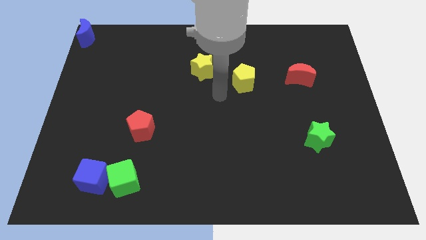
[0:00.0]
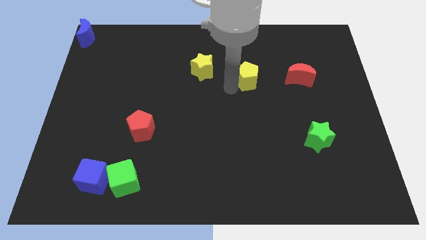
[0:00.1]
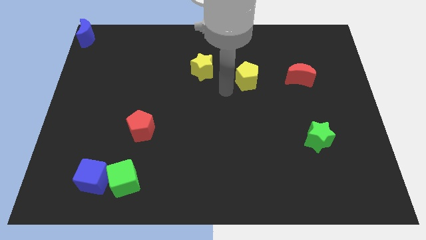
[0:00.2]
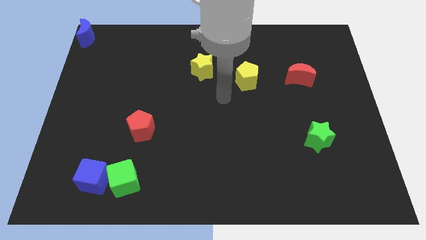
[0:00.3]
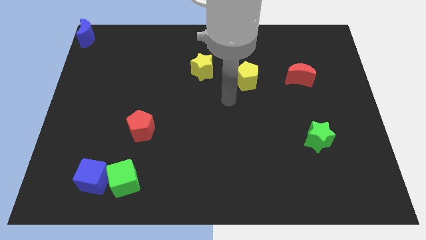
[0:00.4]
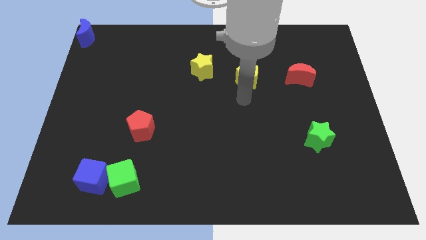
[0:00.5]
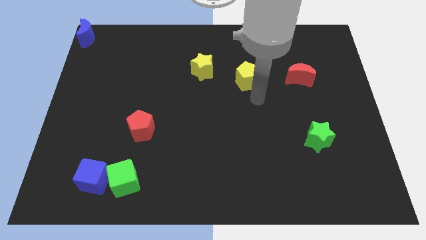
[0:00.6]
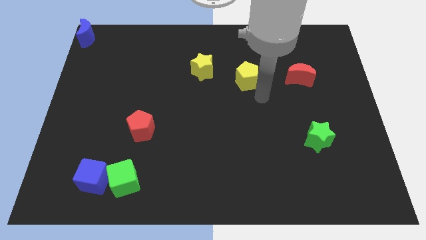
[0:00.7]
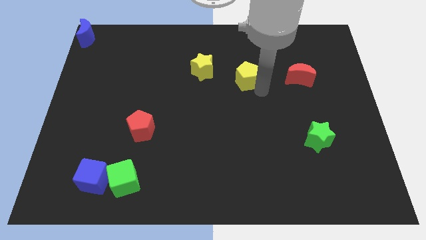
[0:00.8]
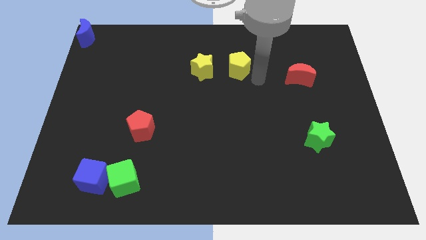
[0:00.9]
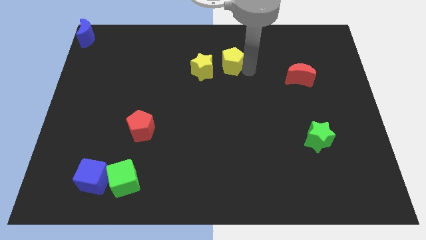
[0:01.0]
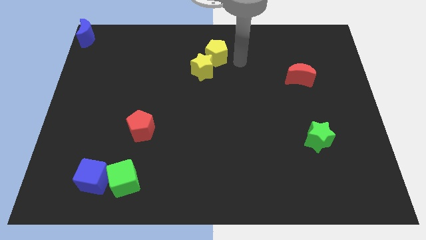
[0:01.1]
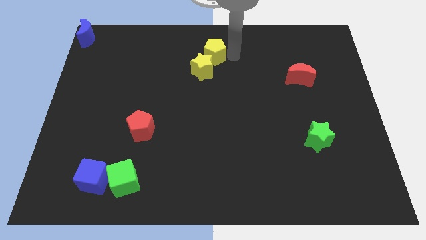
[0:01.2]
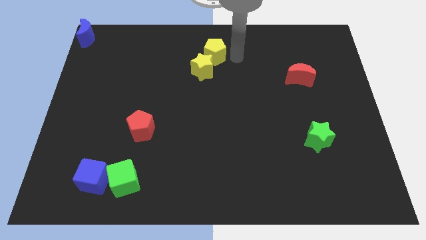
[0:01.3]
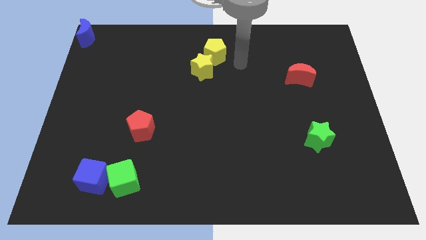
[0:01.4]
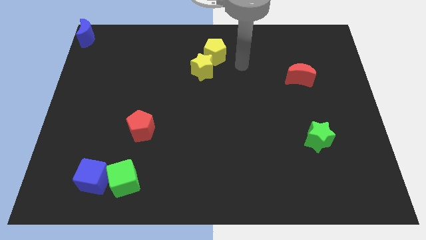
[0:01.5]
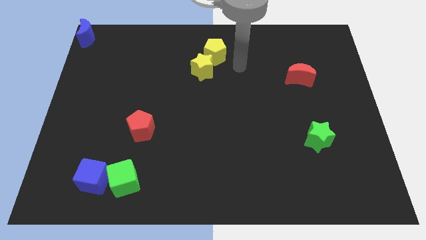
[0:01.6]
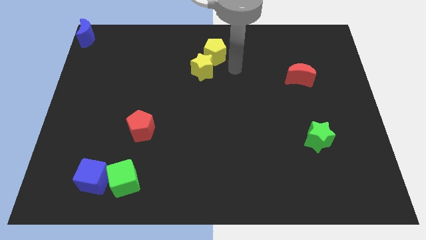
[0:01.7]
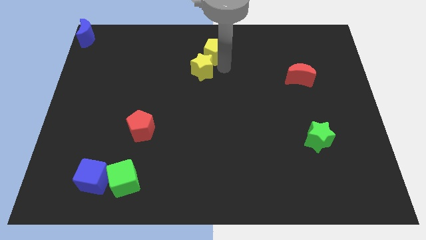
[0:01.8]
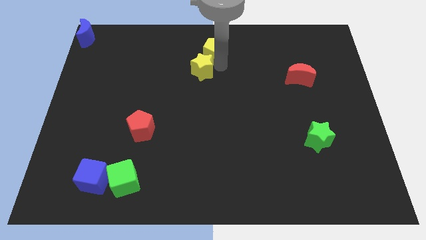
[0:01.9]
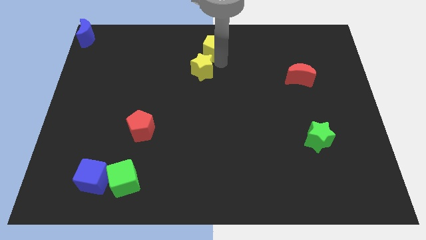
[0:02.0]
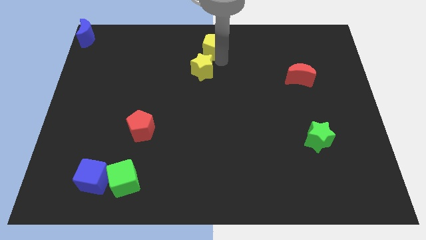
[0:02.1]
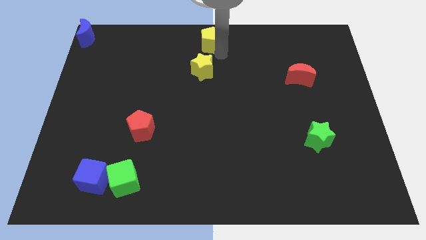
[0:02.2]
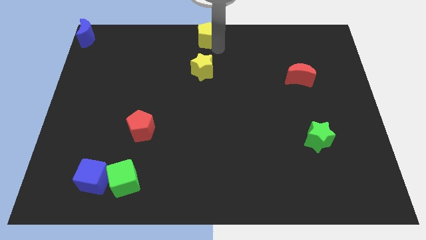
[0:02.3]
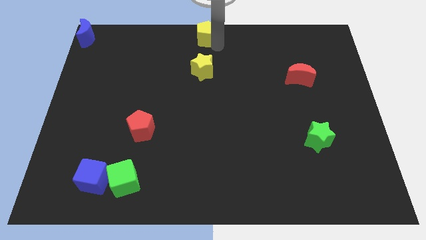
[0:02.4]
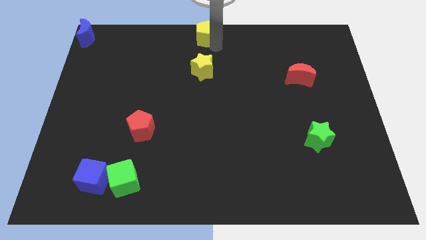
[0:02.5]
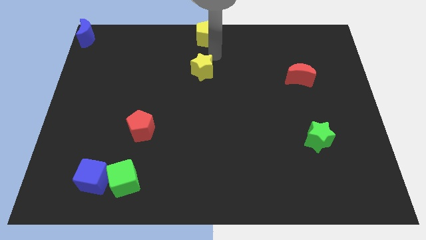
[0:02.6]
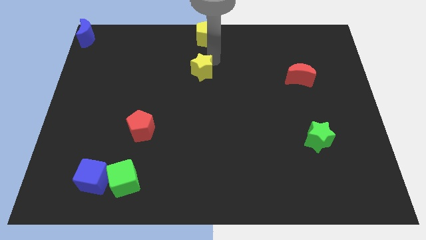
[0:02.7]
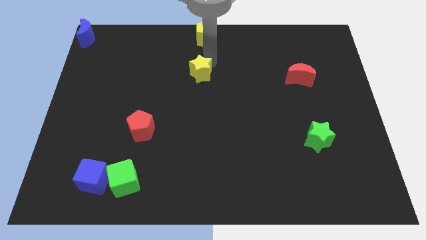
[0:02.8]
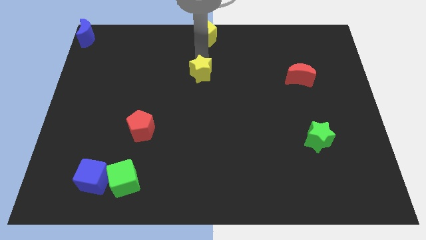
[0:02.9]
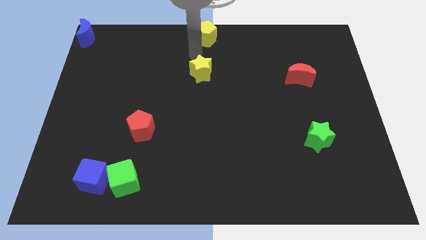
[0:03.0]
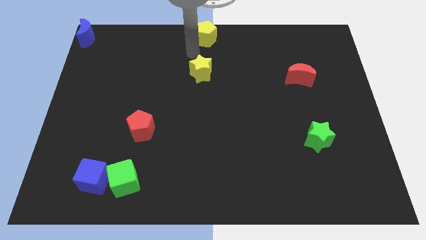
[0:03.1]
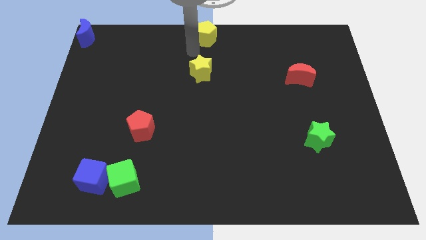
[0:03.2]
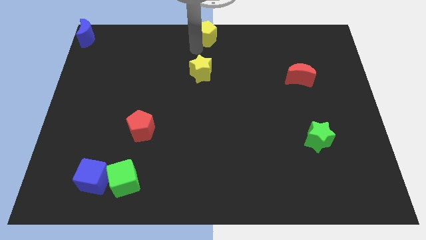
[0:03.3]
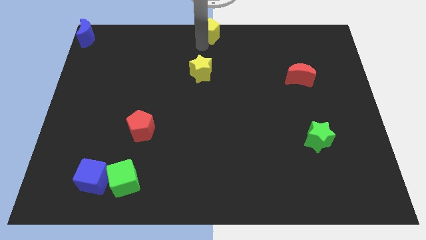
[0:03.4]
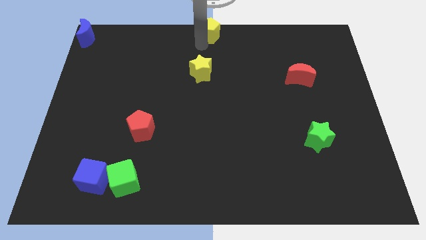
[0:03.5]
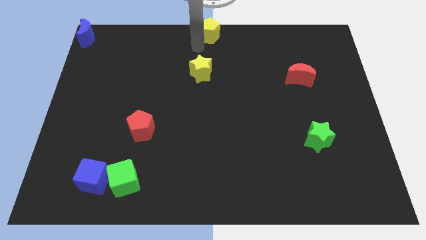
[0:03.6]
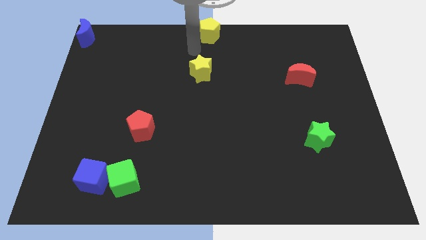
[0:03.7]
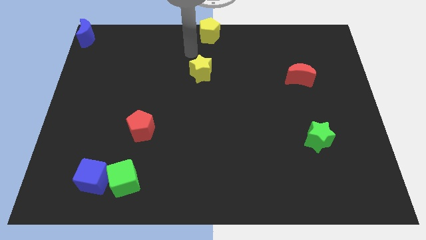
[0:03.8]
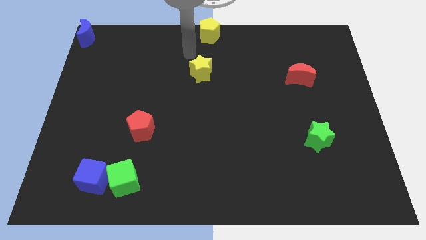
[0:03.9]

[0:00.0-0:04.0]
move the yellow pentagon to the top center of the board

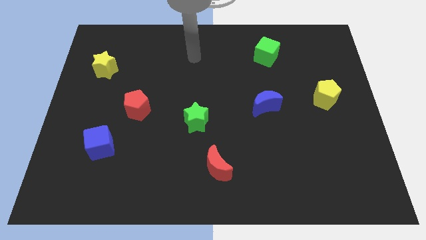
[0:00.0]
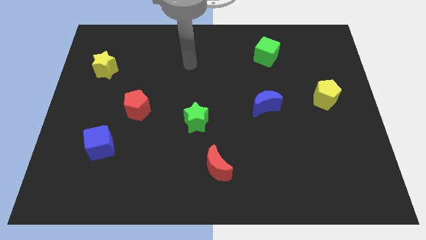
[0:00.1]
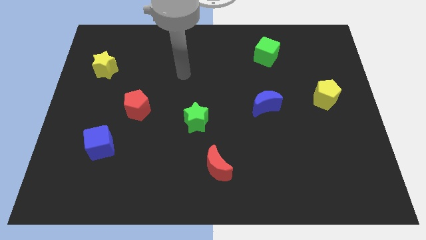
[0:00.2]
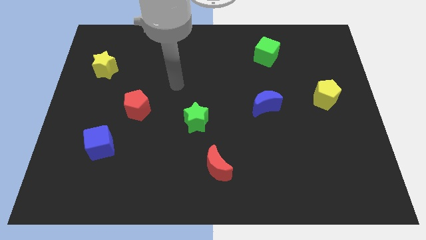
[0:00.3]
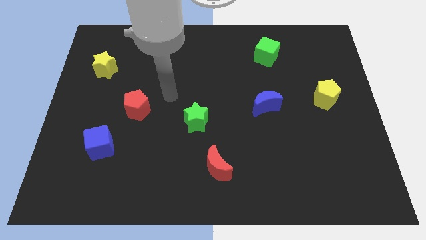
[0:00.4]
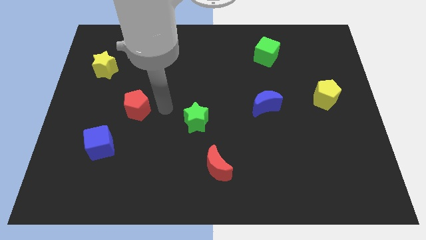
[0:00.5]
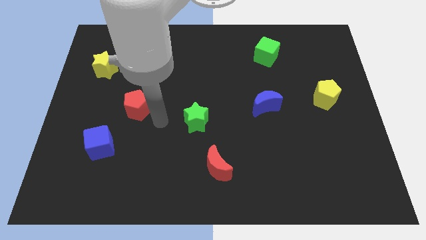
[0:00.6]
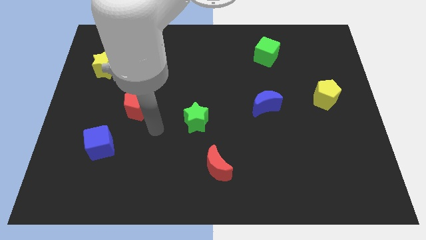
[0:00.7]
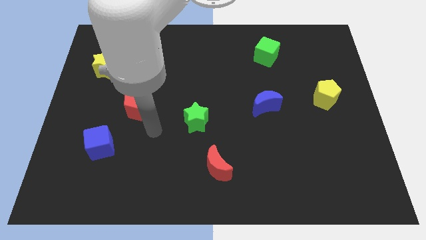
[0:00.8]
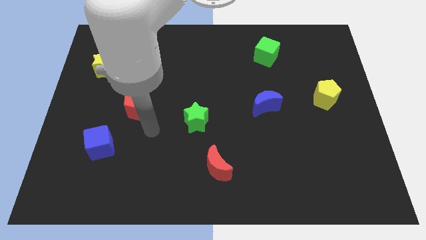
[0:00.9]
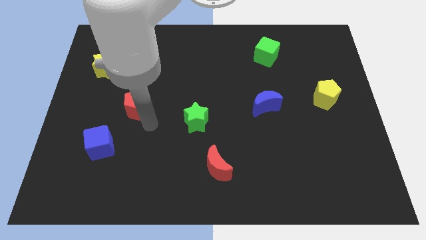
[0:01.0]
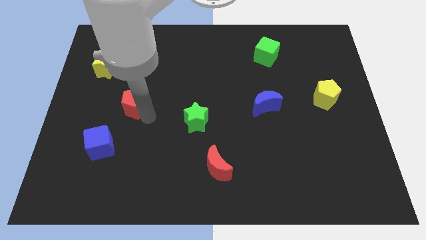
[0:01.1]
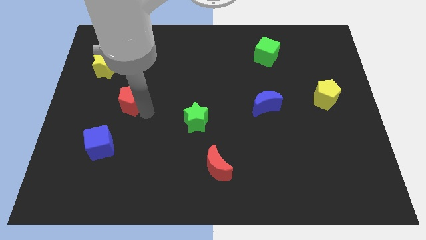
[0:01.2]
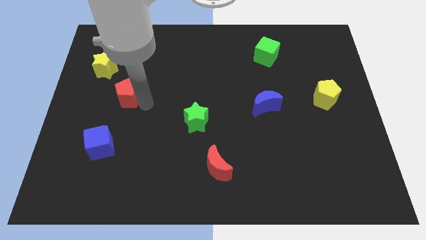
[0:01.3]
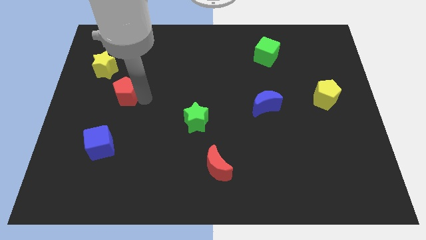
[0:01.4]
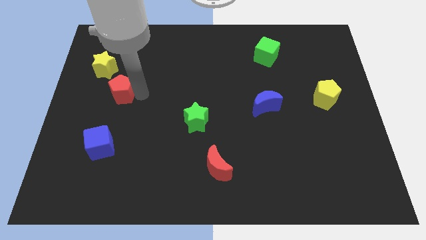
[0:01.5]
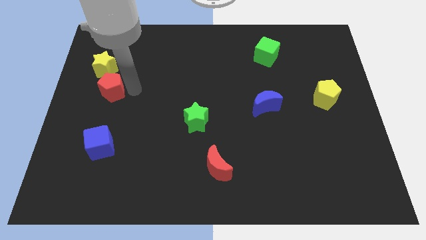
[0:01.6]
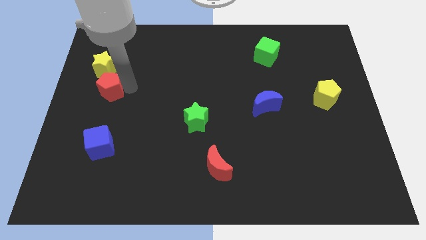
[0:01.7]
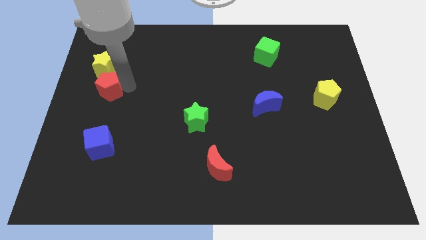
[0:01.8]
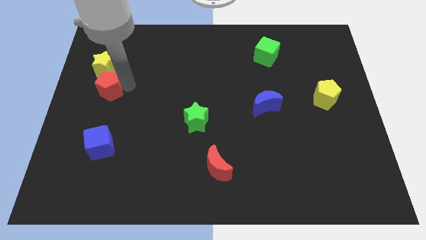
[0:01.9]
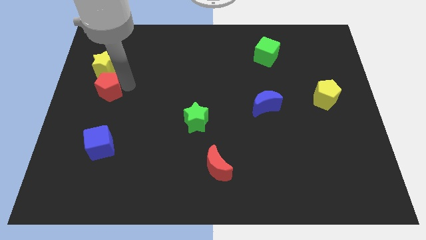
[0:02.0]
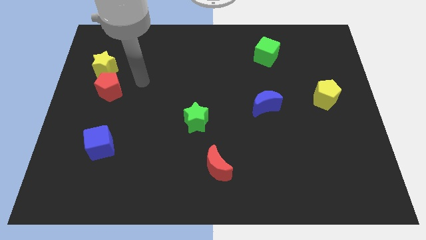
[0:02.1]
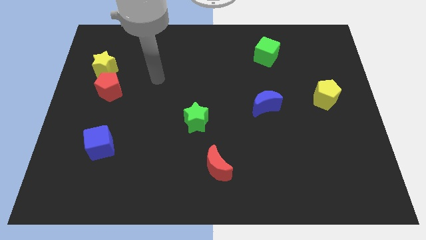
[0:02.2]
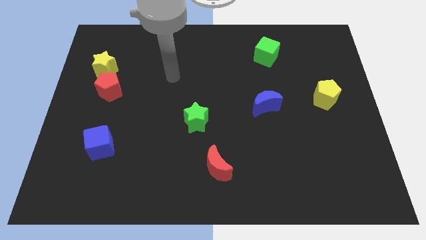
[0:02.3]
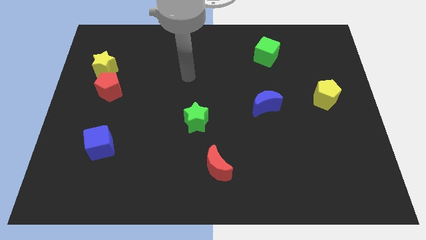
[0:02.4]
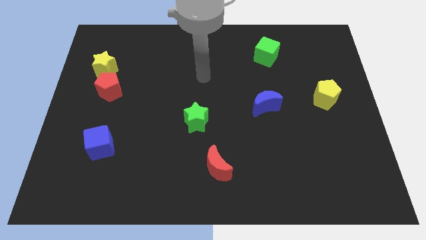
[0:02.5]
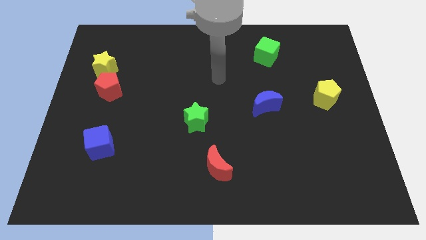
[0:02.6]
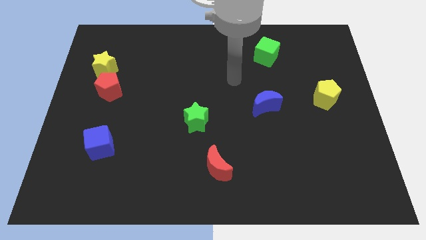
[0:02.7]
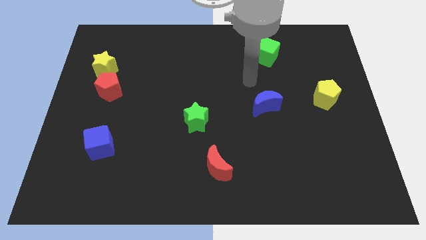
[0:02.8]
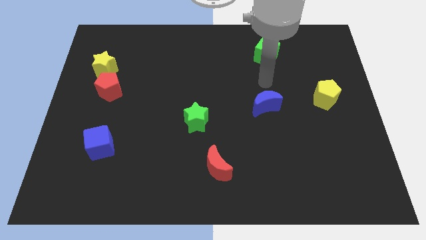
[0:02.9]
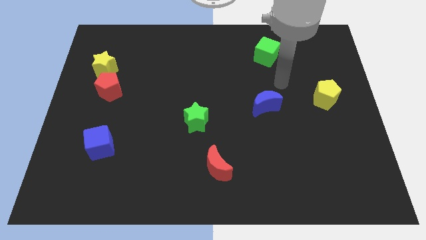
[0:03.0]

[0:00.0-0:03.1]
move the red pentagon to the bottom right side of the yellow star

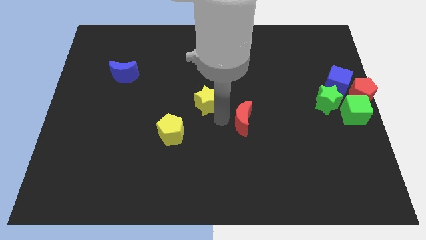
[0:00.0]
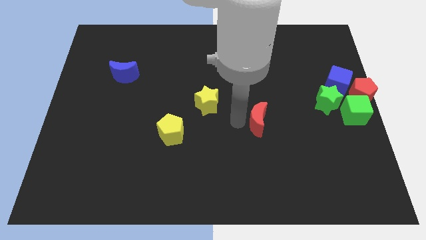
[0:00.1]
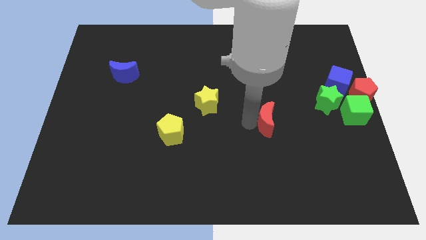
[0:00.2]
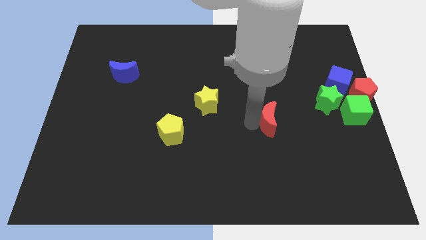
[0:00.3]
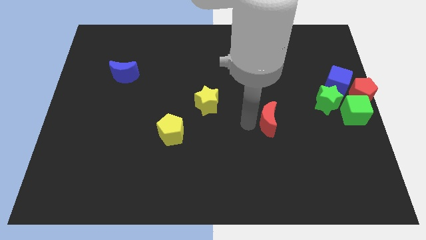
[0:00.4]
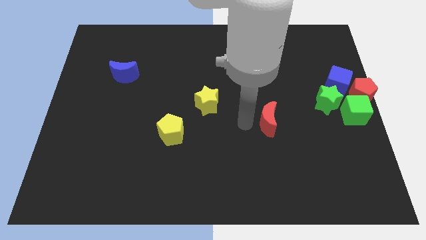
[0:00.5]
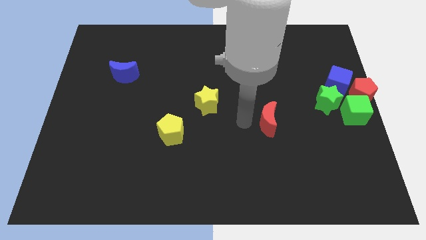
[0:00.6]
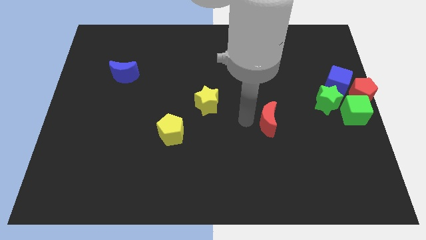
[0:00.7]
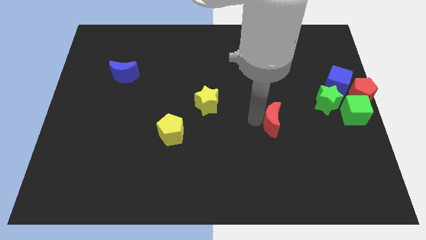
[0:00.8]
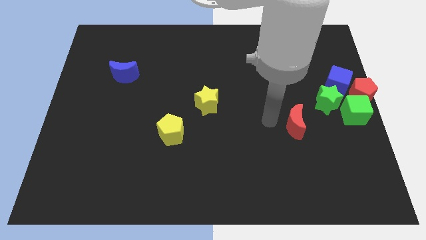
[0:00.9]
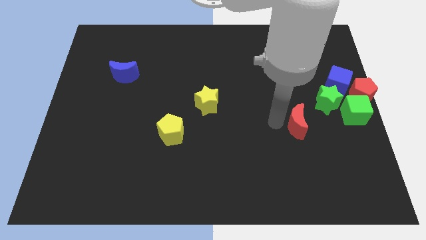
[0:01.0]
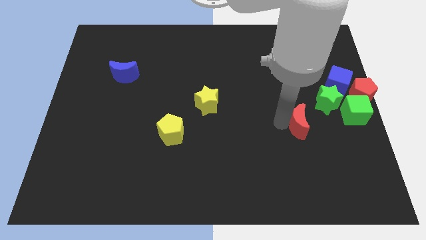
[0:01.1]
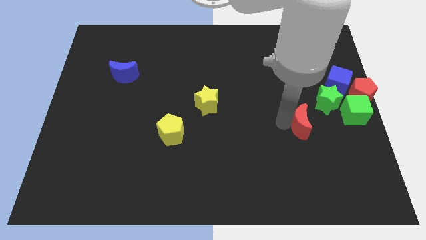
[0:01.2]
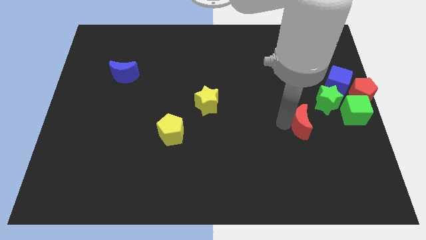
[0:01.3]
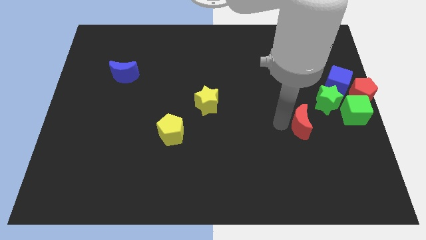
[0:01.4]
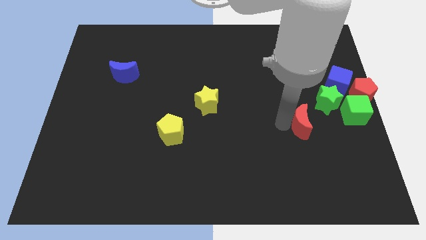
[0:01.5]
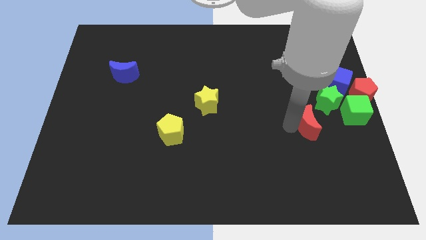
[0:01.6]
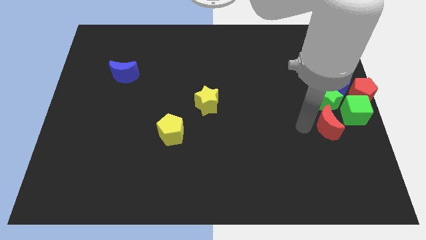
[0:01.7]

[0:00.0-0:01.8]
push red moon towards group of blocks

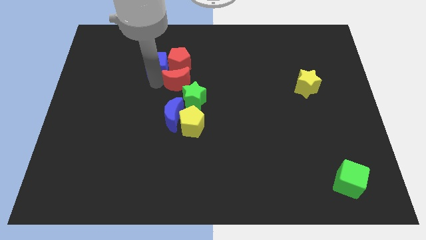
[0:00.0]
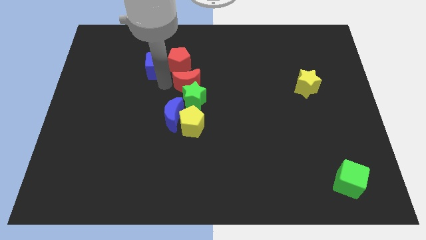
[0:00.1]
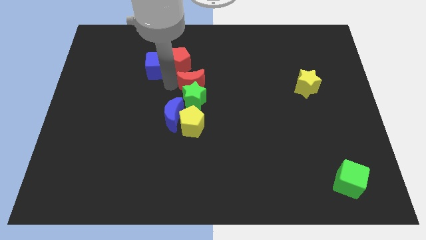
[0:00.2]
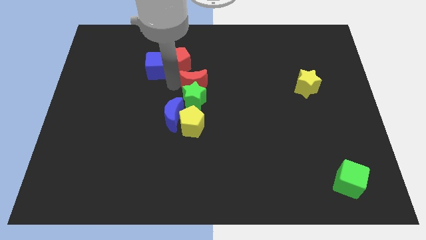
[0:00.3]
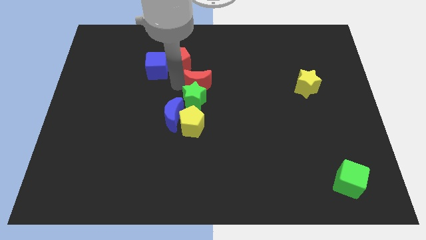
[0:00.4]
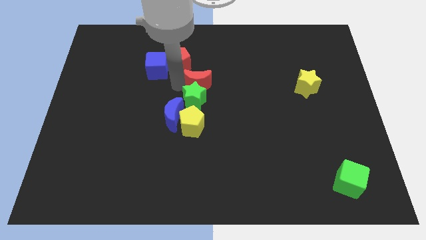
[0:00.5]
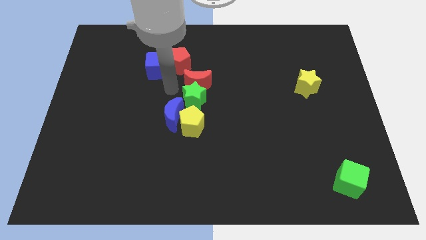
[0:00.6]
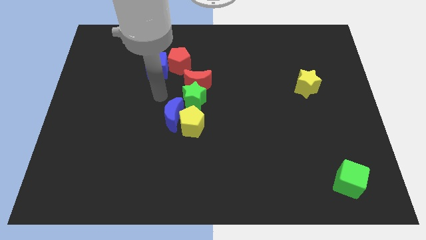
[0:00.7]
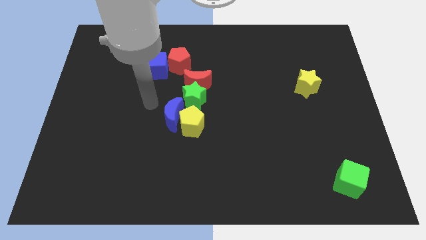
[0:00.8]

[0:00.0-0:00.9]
move the red moon to the right
